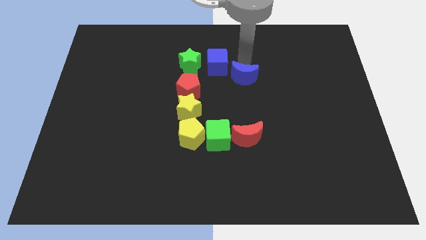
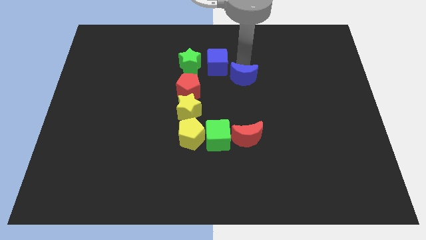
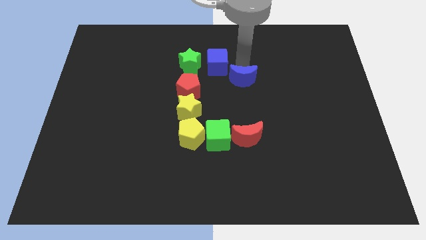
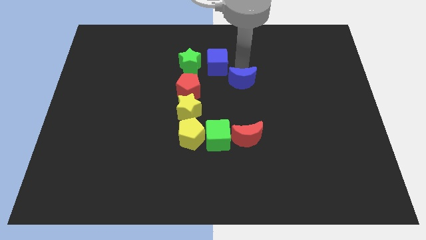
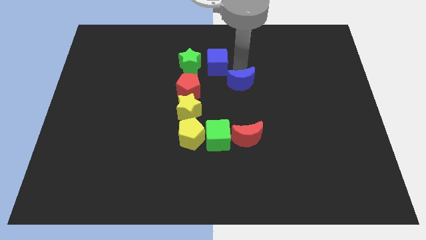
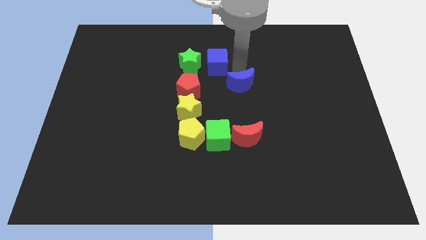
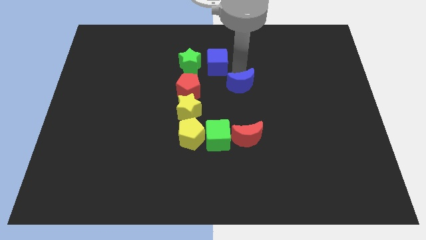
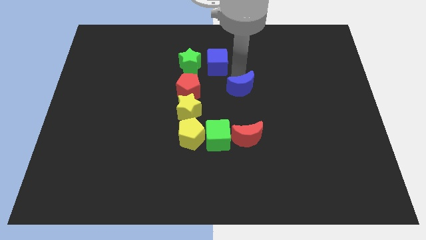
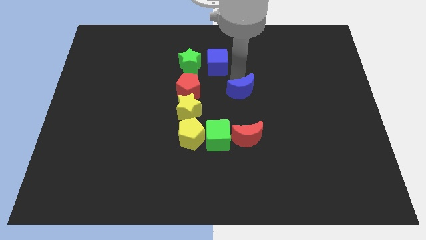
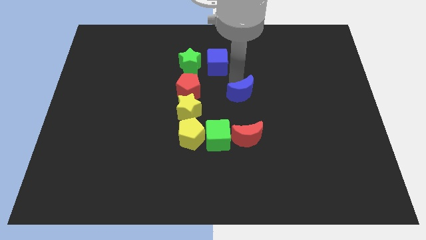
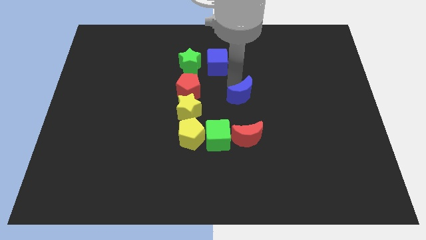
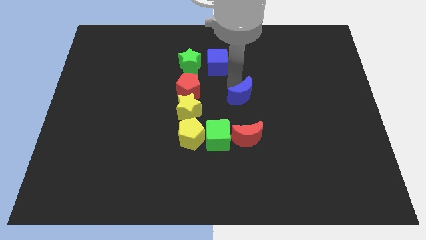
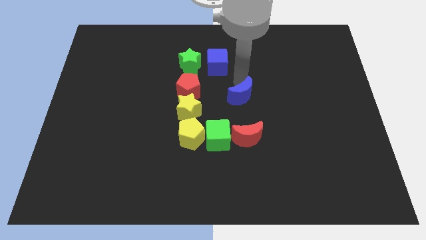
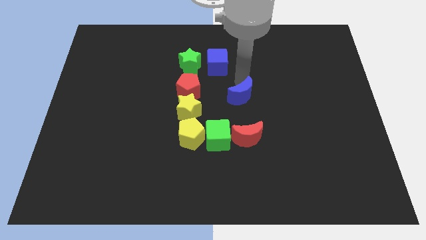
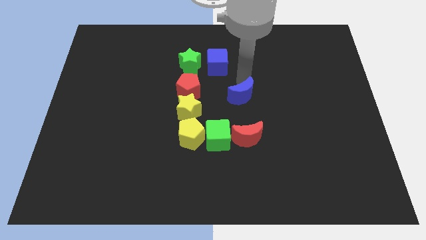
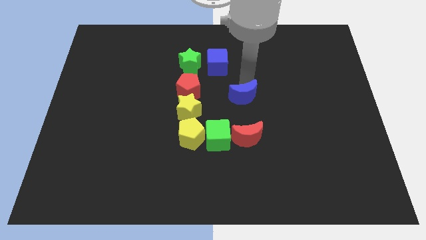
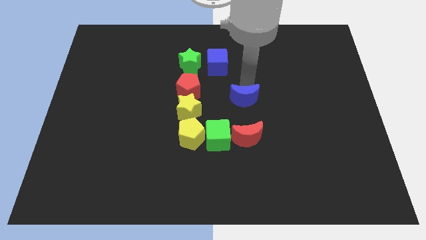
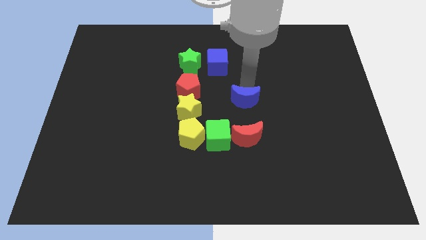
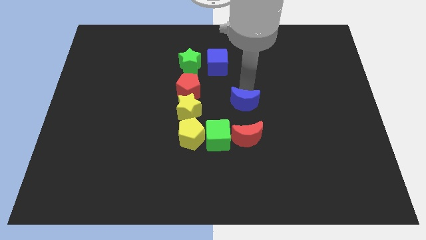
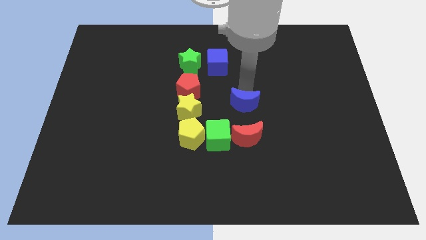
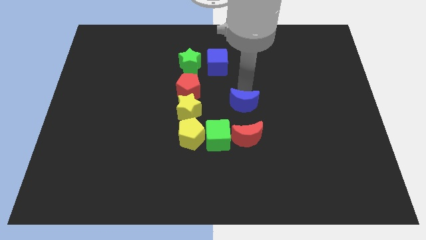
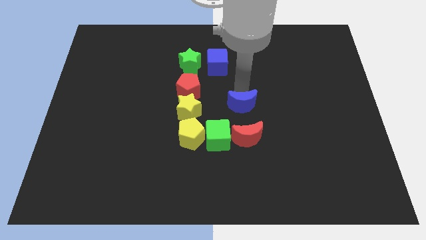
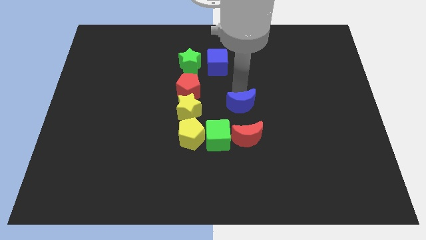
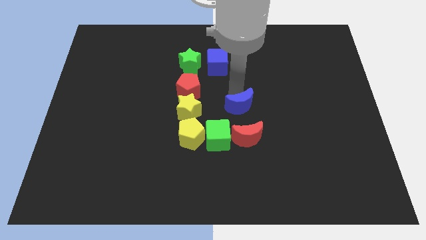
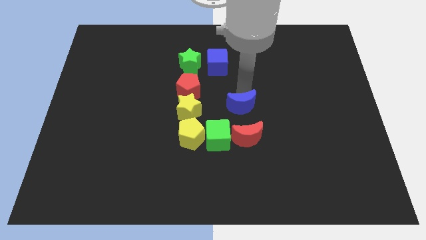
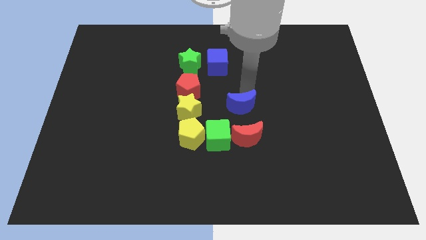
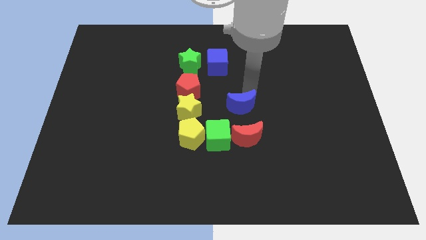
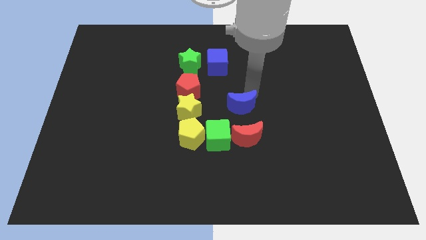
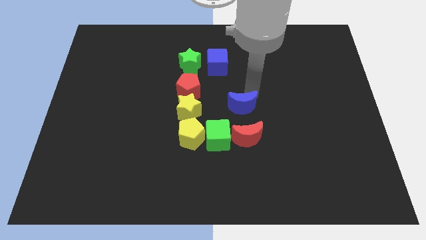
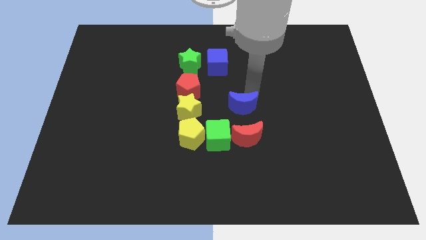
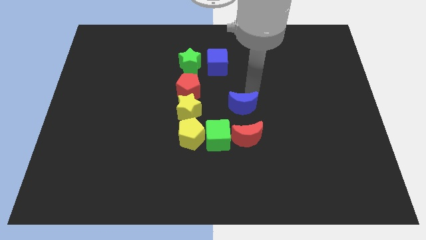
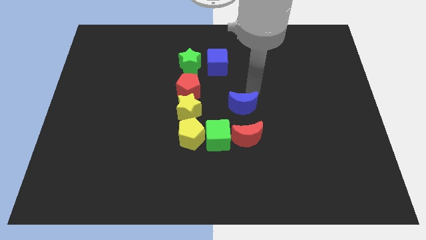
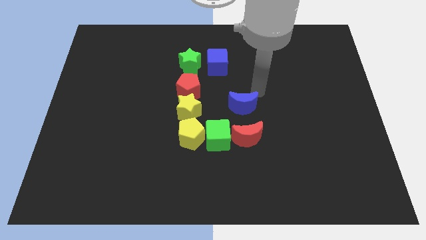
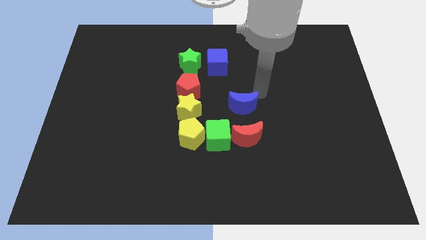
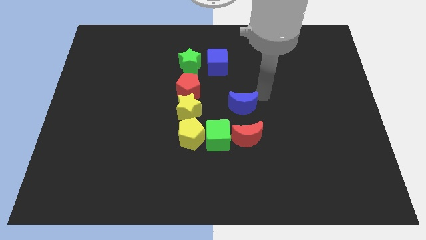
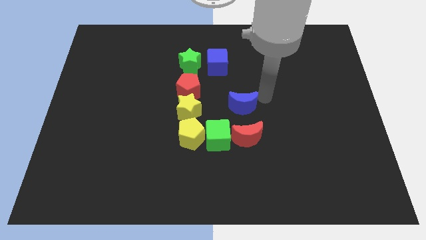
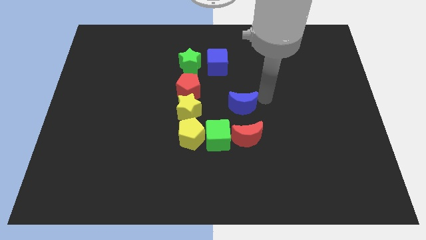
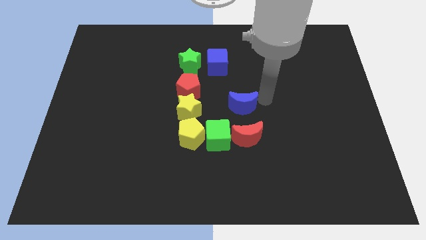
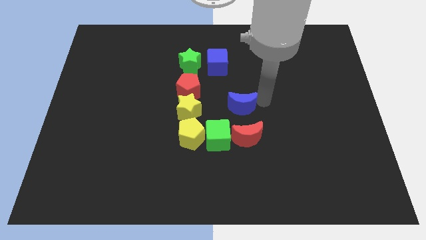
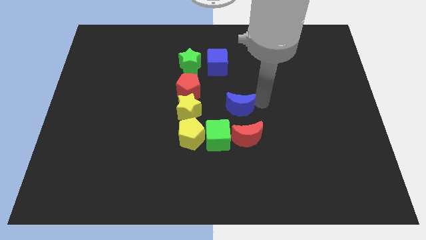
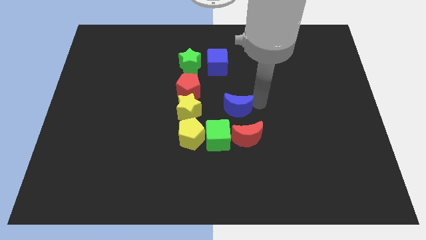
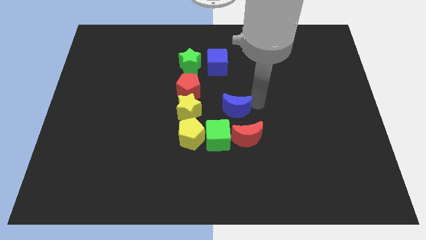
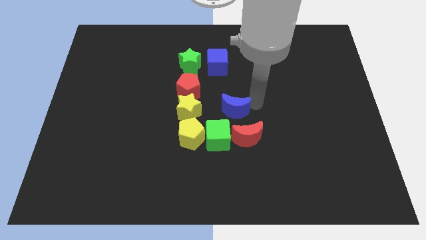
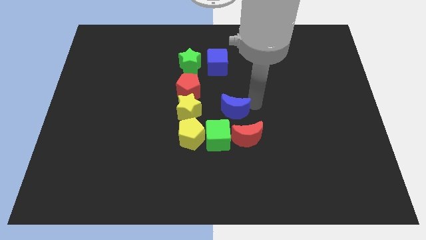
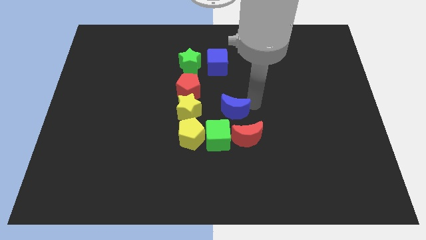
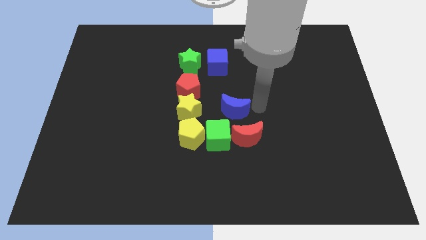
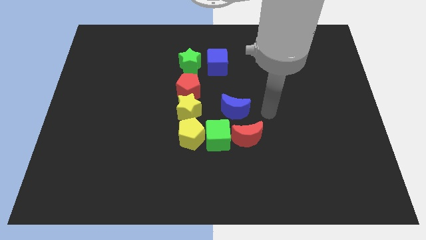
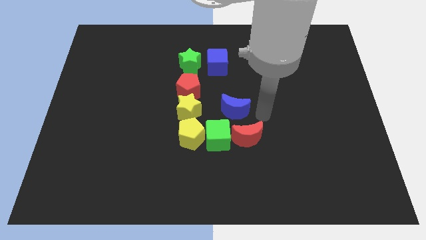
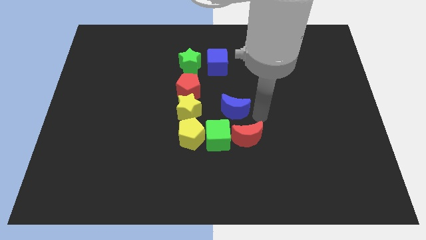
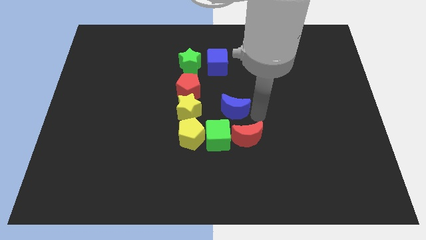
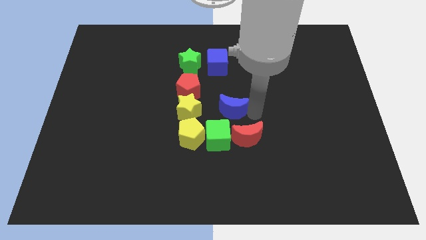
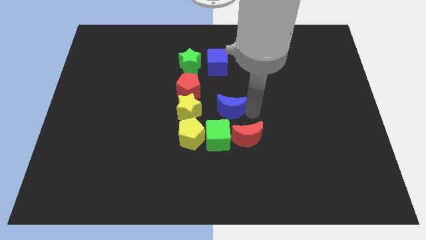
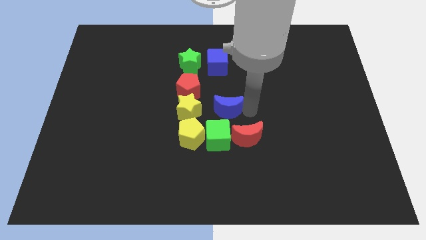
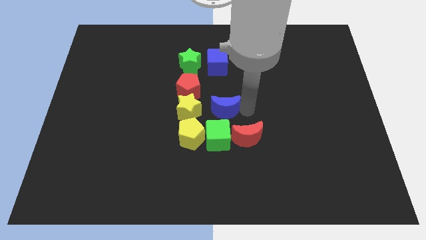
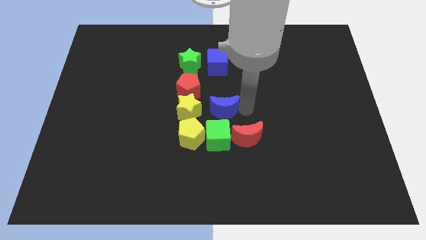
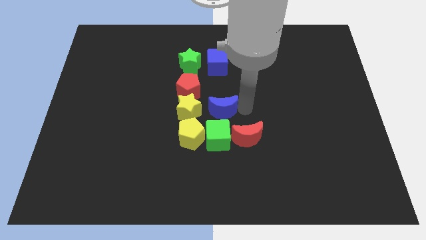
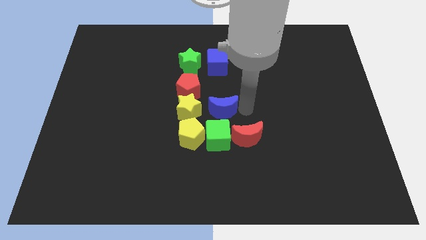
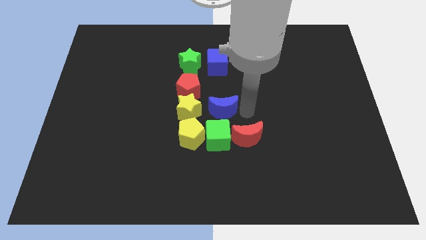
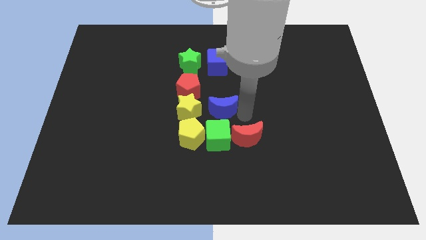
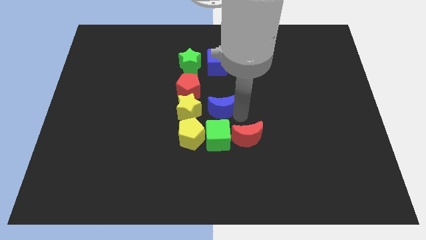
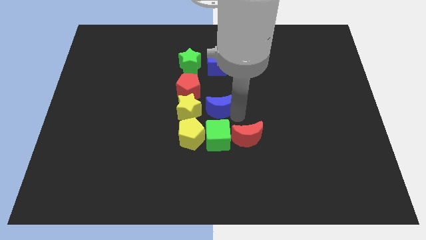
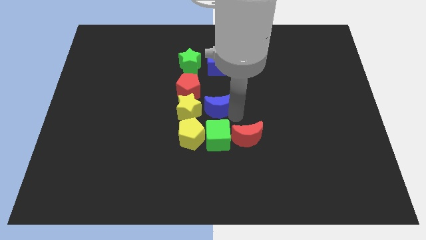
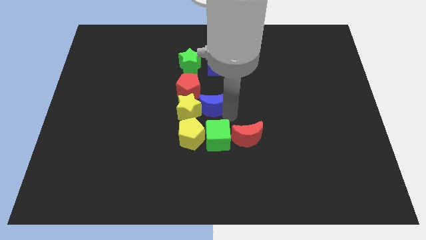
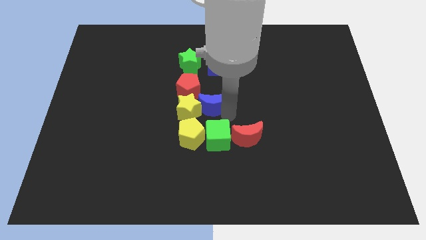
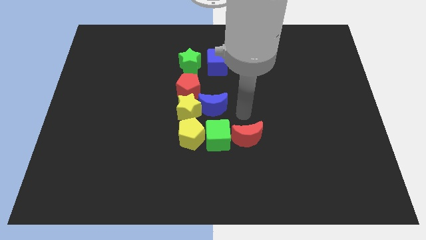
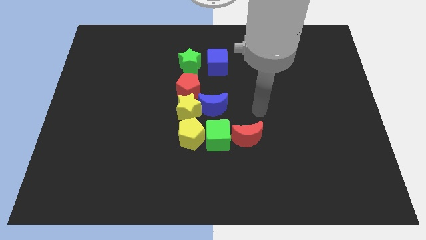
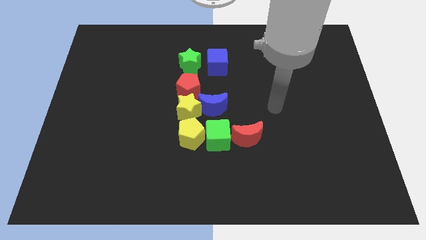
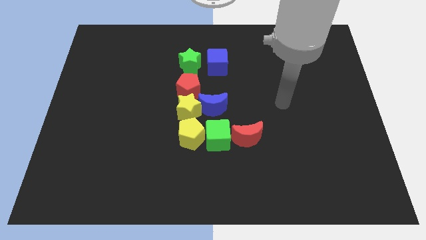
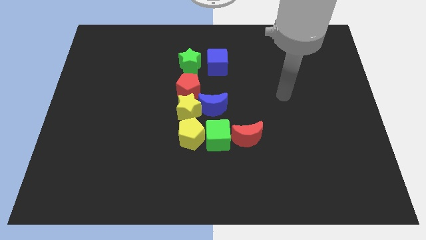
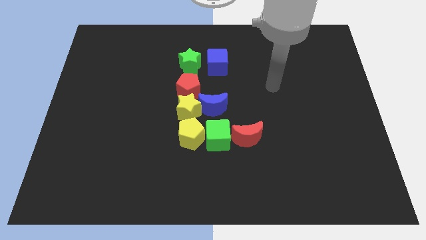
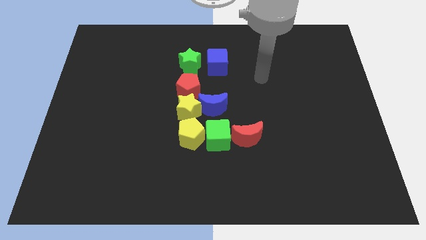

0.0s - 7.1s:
push blue moon into yellow star

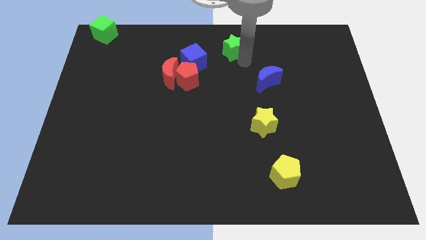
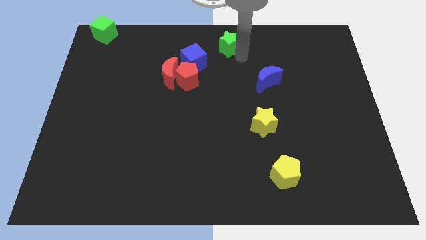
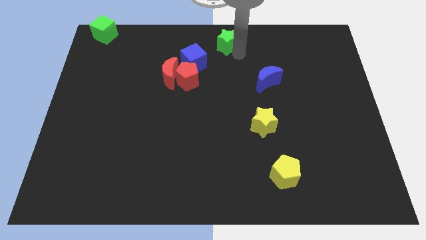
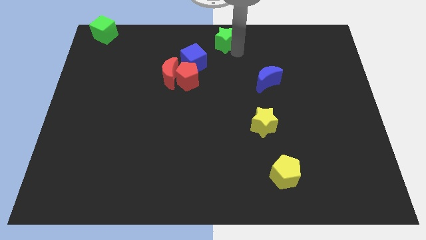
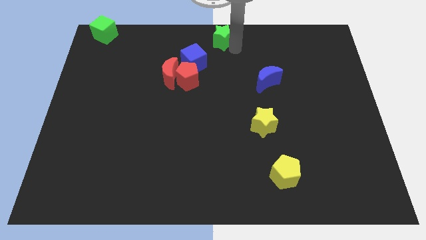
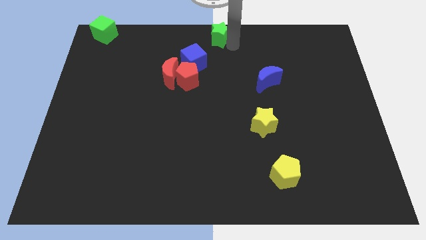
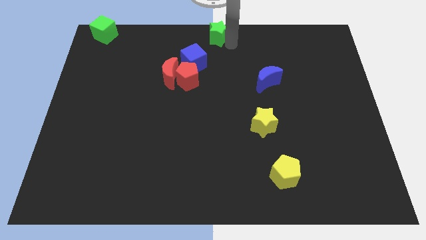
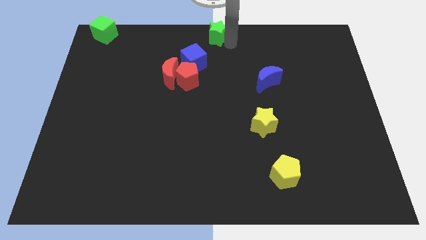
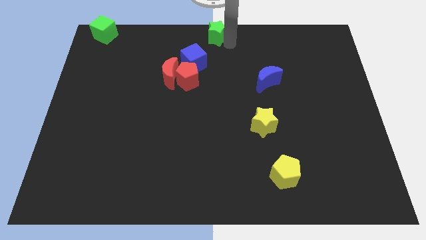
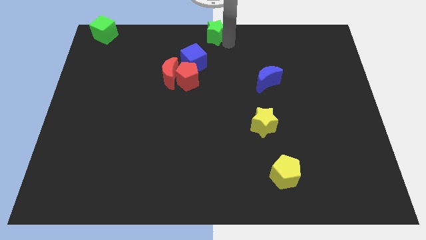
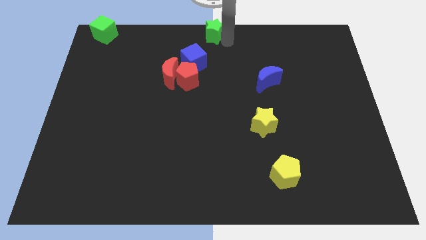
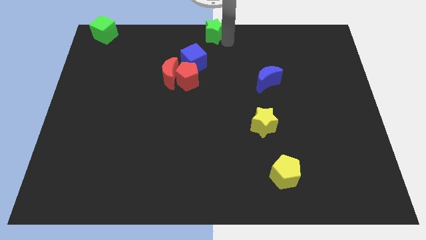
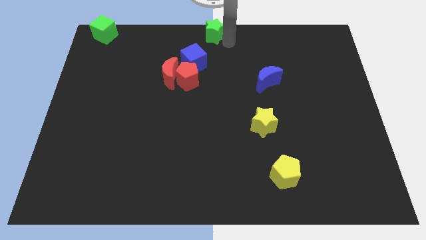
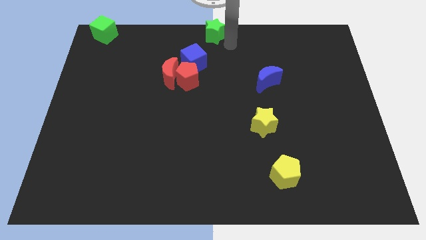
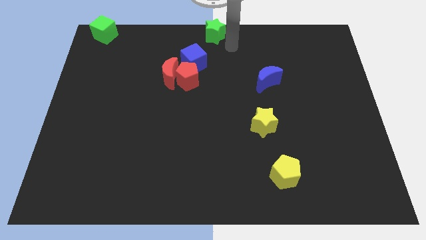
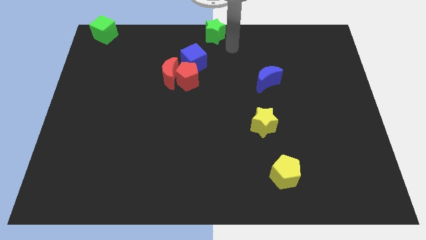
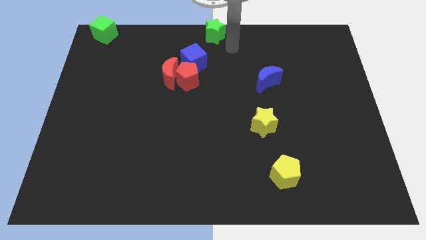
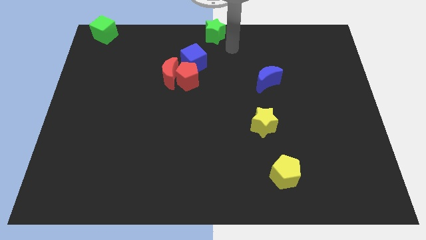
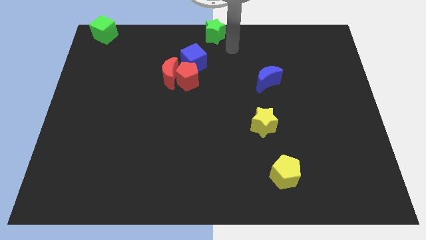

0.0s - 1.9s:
move the green star towards top centre of the board
